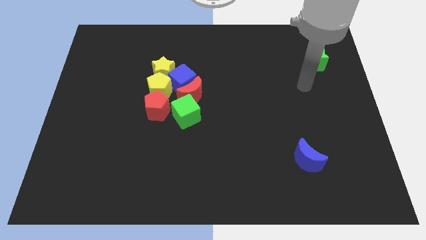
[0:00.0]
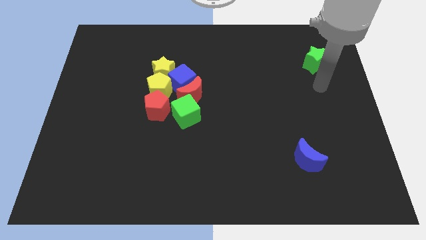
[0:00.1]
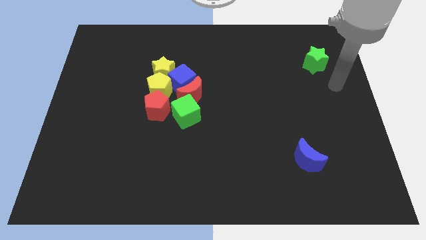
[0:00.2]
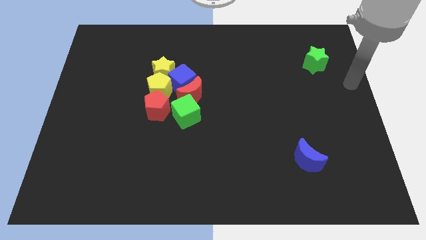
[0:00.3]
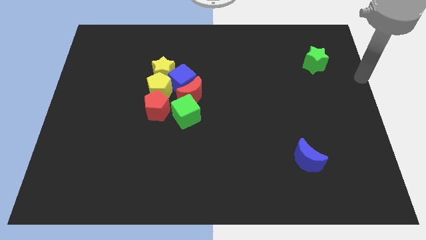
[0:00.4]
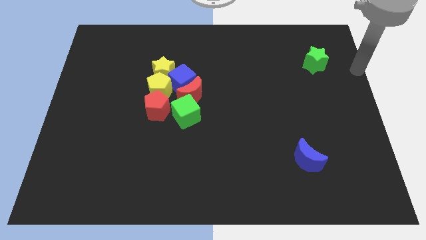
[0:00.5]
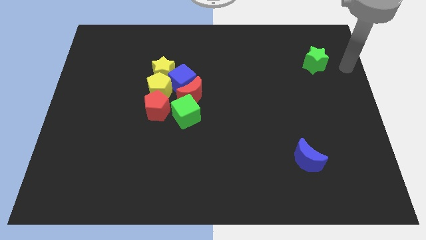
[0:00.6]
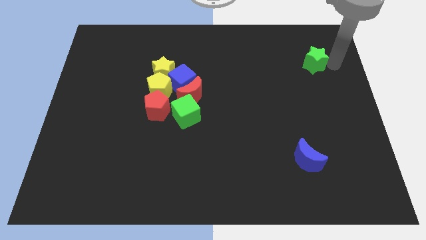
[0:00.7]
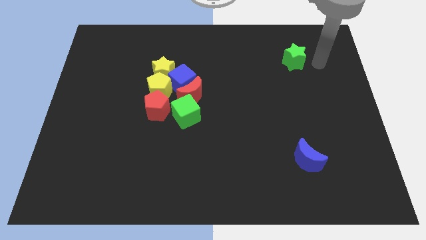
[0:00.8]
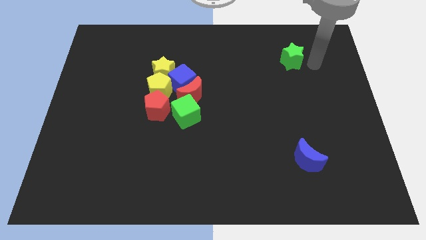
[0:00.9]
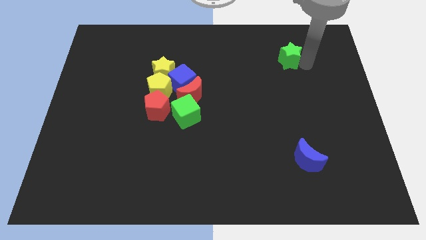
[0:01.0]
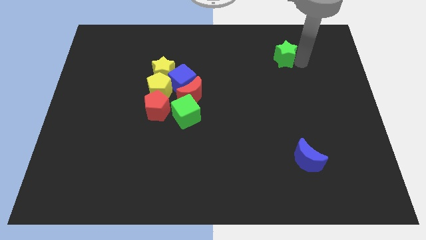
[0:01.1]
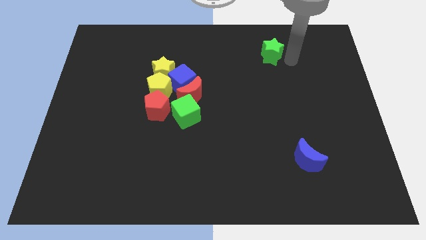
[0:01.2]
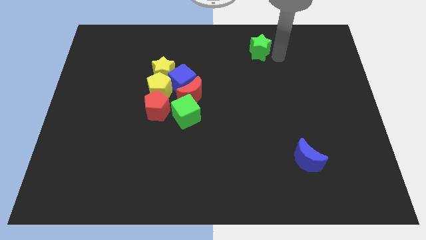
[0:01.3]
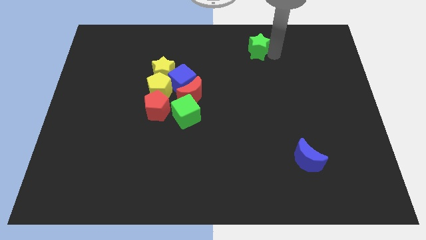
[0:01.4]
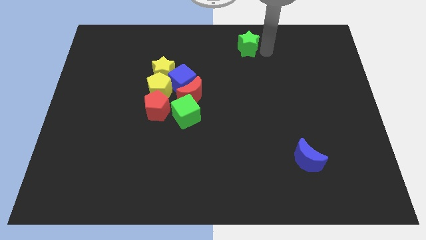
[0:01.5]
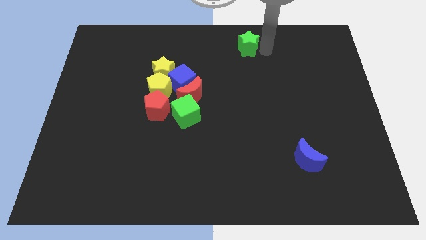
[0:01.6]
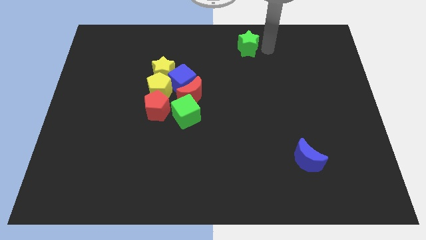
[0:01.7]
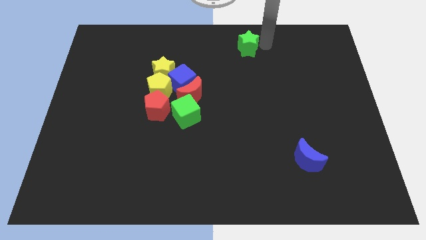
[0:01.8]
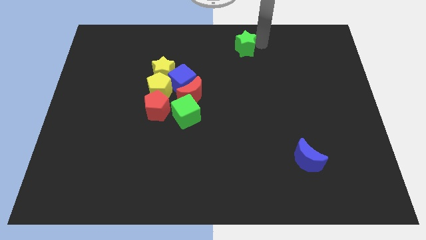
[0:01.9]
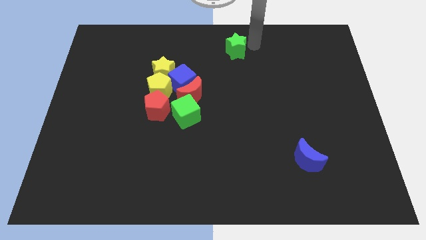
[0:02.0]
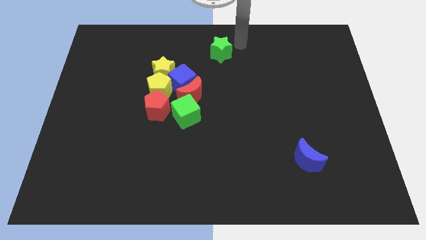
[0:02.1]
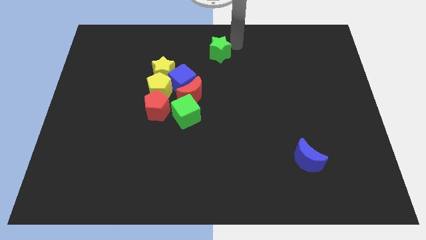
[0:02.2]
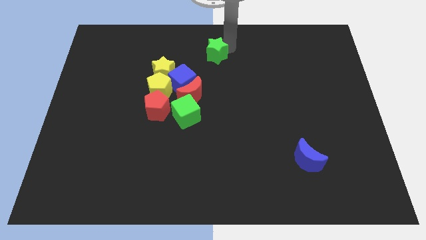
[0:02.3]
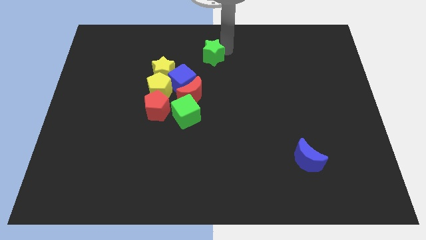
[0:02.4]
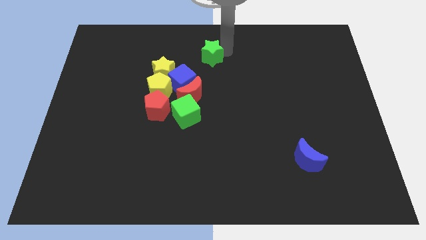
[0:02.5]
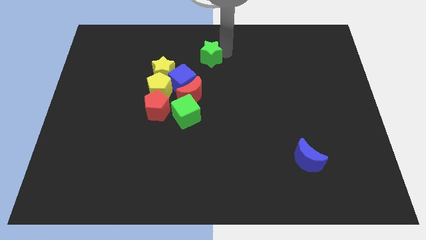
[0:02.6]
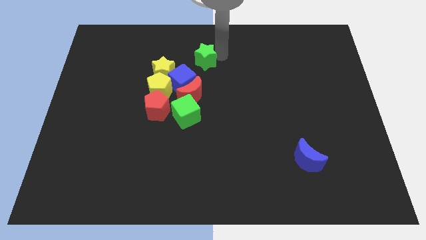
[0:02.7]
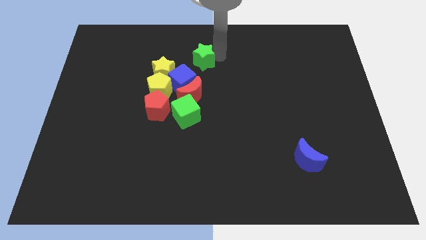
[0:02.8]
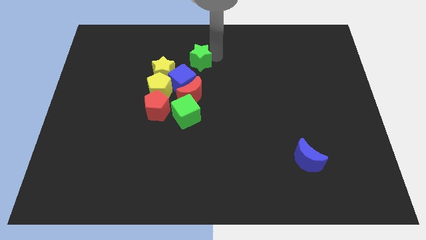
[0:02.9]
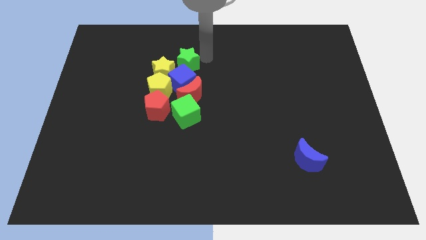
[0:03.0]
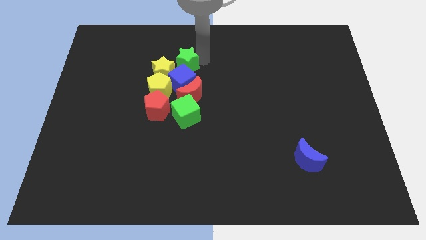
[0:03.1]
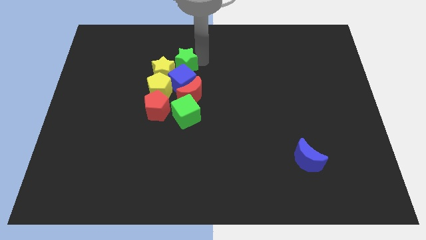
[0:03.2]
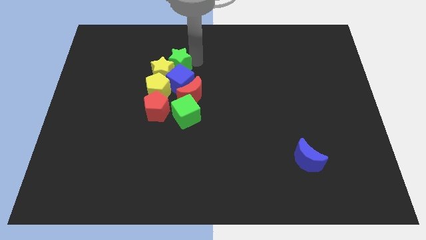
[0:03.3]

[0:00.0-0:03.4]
slide the green star vertically above the blue cube

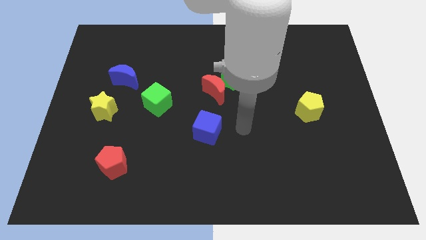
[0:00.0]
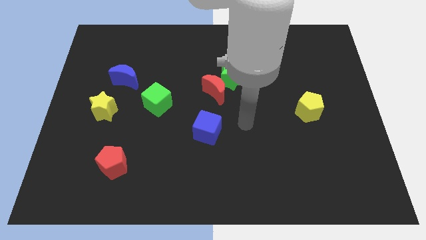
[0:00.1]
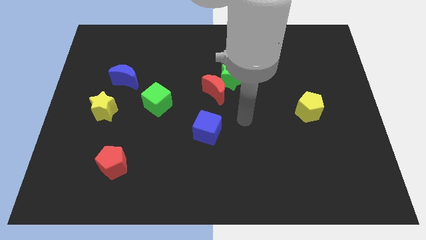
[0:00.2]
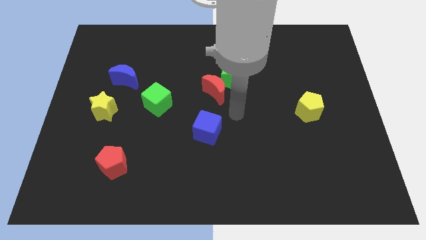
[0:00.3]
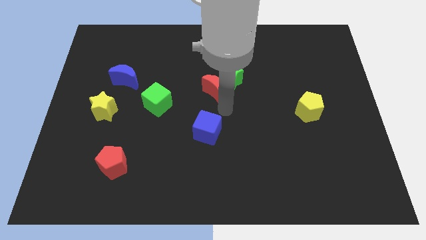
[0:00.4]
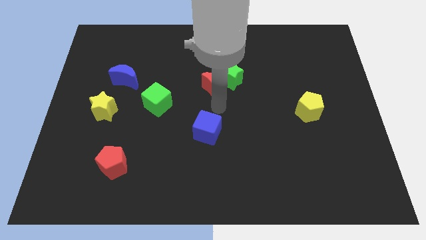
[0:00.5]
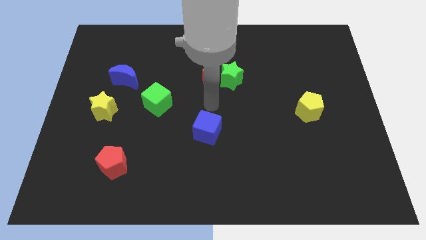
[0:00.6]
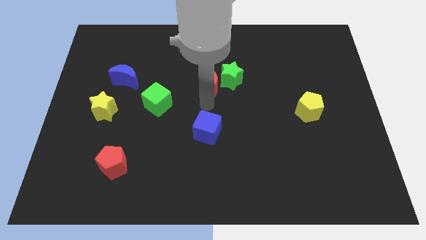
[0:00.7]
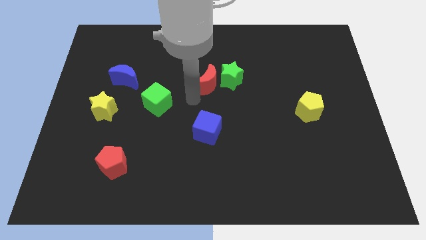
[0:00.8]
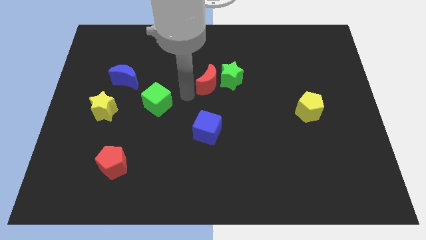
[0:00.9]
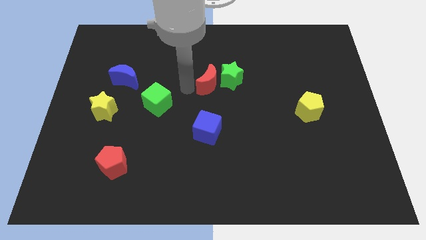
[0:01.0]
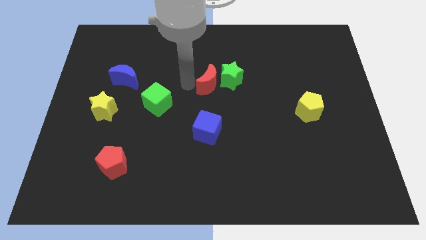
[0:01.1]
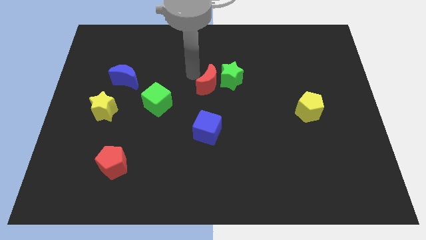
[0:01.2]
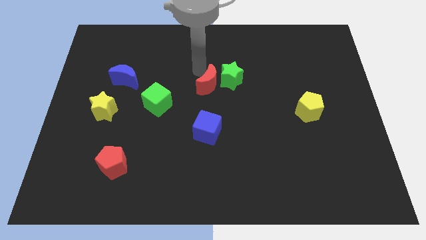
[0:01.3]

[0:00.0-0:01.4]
slide the red crescent to the right side of the blue moon

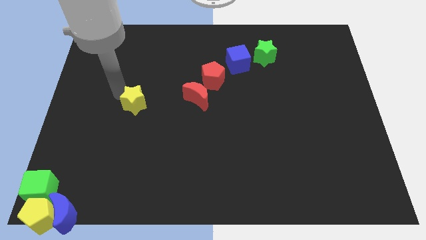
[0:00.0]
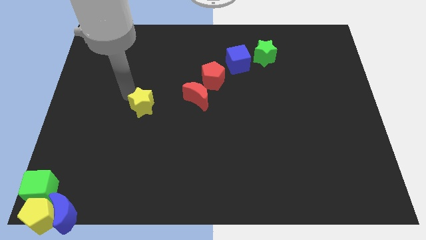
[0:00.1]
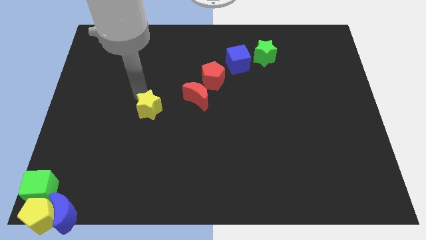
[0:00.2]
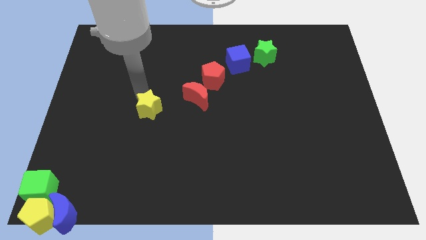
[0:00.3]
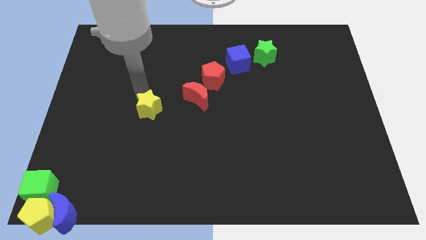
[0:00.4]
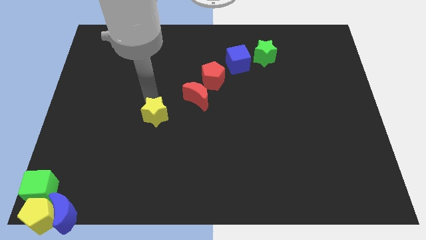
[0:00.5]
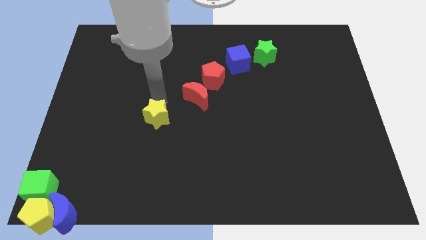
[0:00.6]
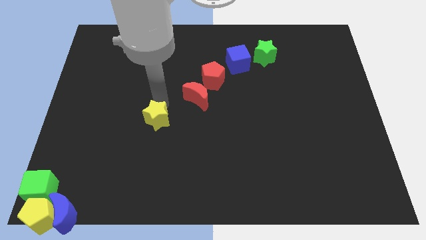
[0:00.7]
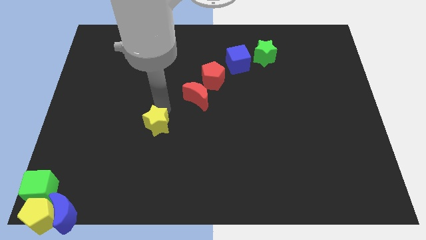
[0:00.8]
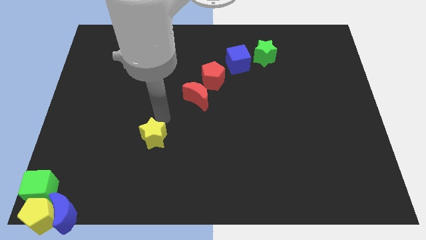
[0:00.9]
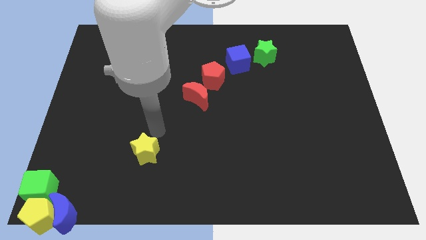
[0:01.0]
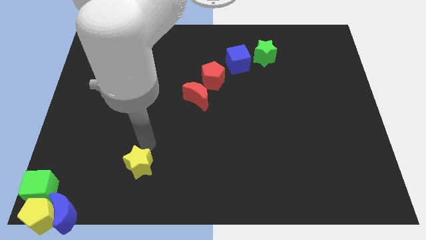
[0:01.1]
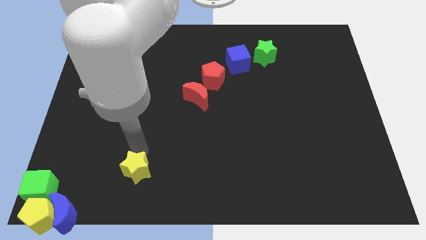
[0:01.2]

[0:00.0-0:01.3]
move the yellow star towards the bottom side of the board

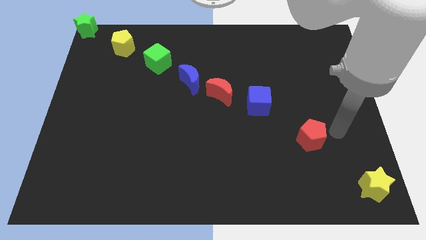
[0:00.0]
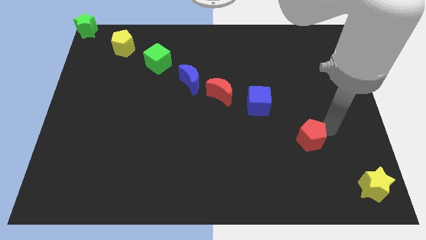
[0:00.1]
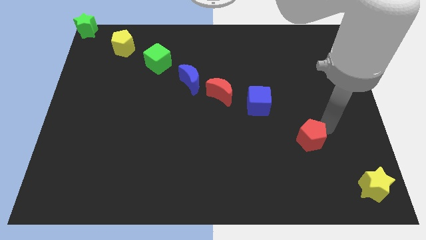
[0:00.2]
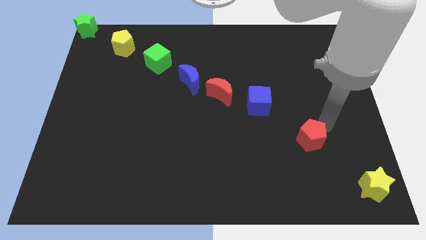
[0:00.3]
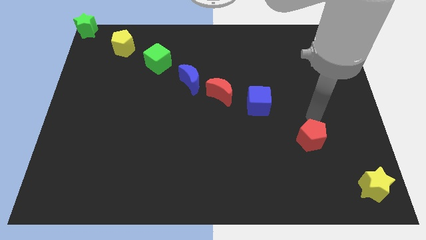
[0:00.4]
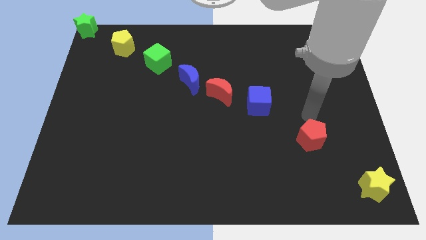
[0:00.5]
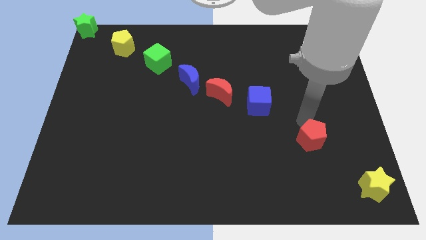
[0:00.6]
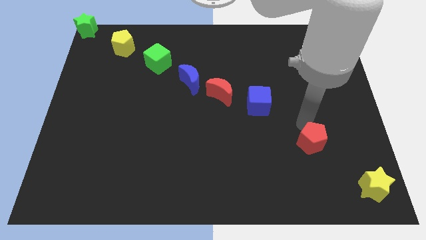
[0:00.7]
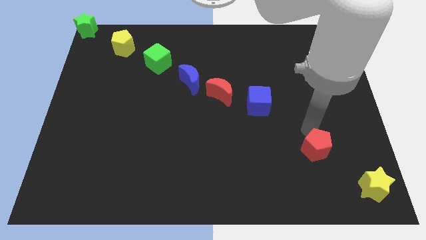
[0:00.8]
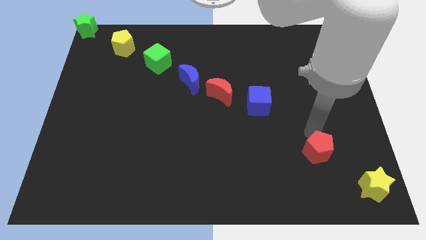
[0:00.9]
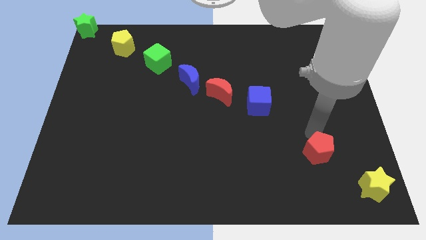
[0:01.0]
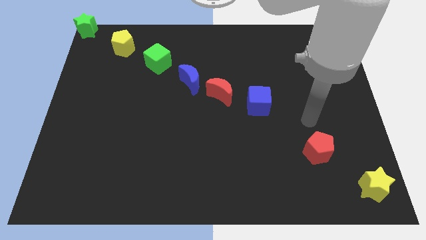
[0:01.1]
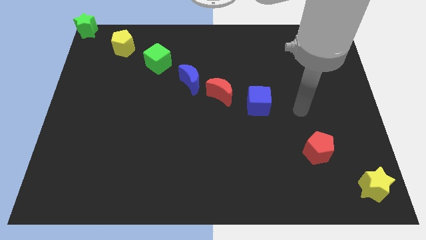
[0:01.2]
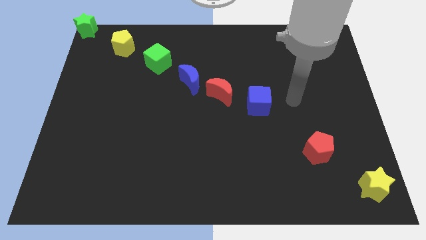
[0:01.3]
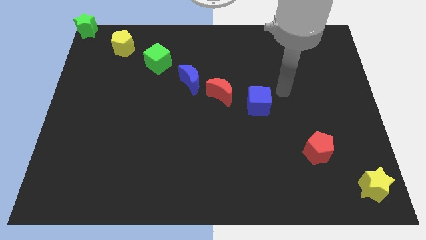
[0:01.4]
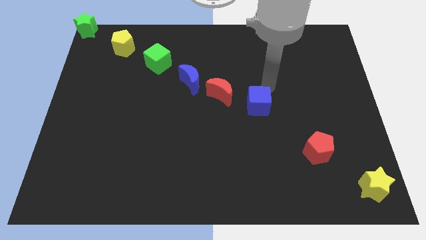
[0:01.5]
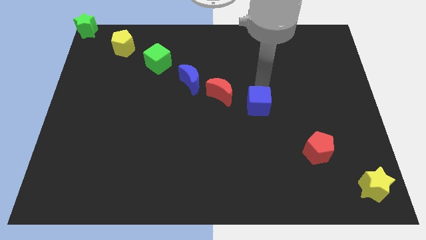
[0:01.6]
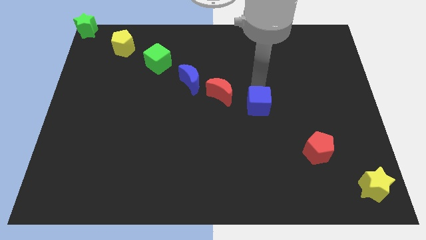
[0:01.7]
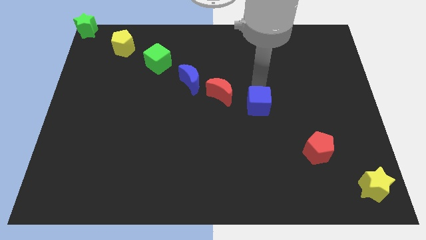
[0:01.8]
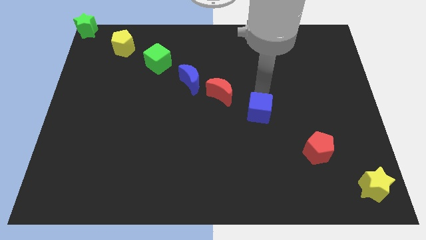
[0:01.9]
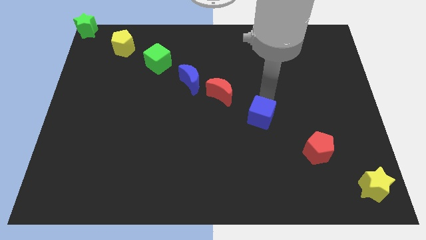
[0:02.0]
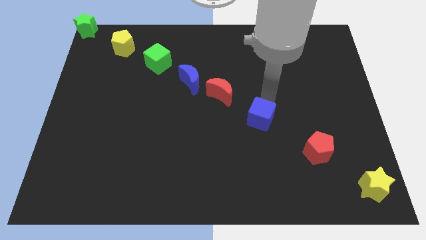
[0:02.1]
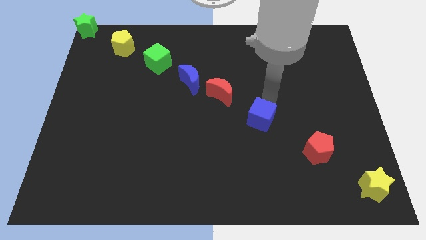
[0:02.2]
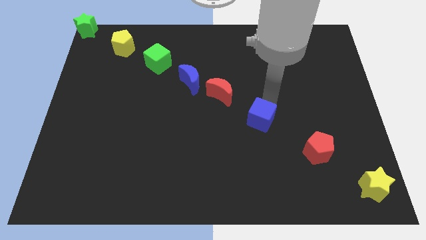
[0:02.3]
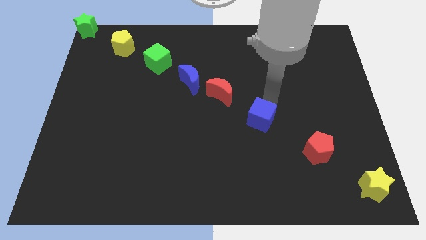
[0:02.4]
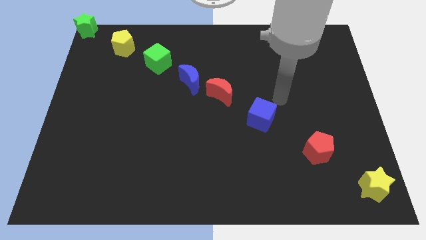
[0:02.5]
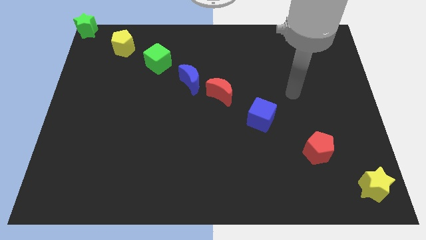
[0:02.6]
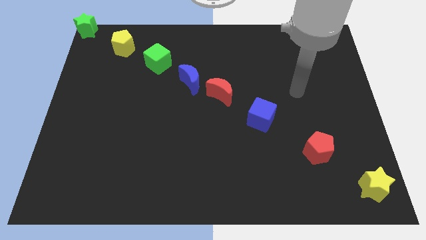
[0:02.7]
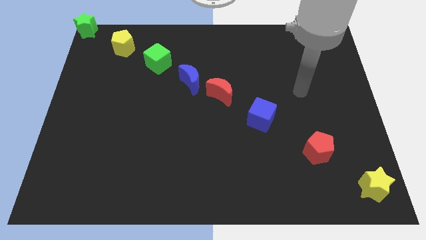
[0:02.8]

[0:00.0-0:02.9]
move red pentagon slightly towards the yellow star
